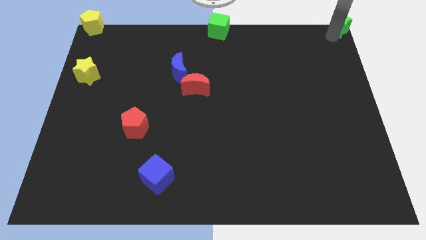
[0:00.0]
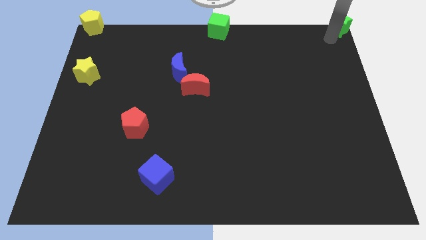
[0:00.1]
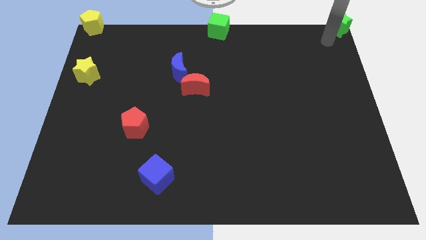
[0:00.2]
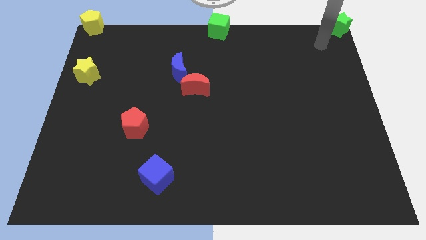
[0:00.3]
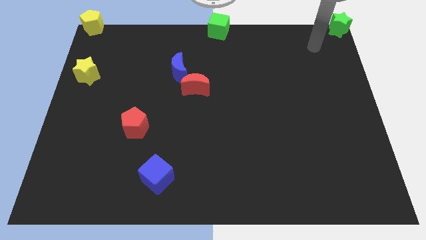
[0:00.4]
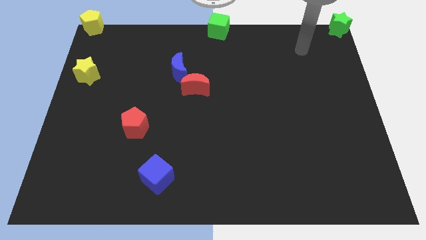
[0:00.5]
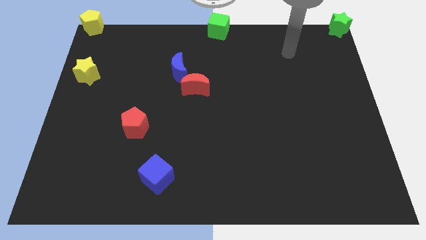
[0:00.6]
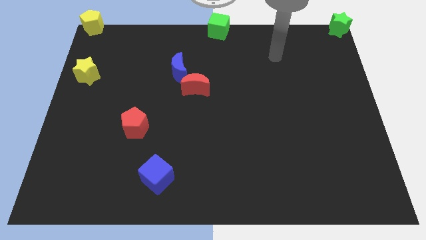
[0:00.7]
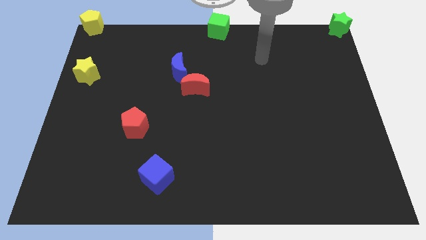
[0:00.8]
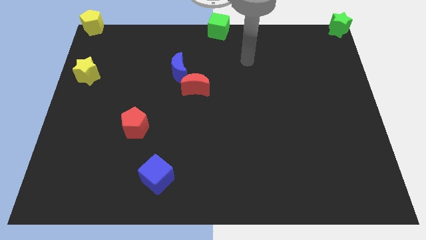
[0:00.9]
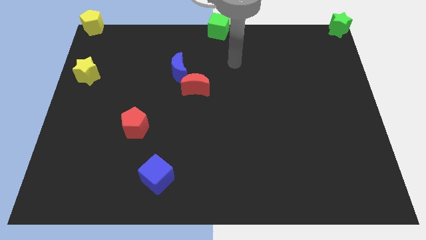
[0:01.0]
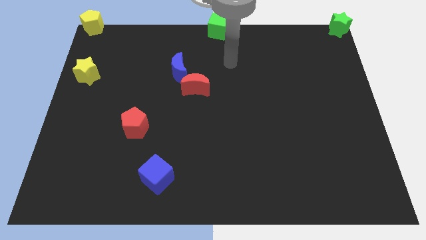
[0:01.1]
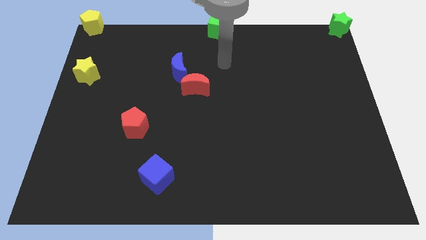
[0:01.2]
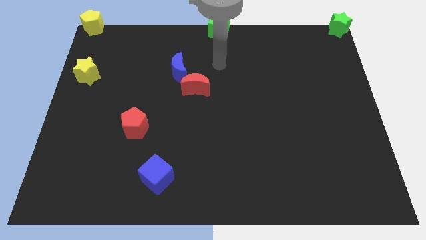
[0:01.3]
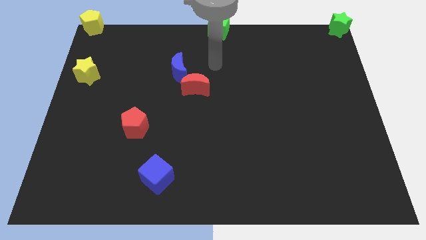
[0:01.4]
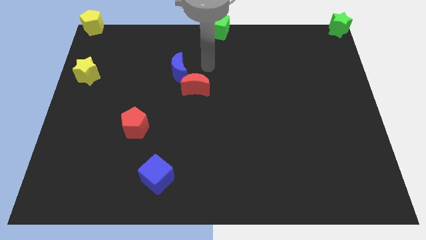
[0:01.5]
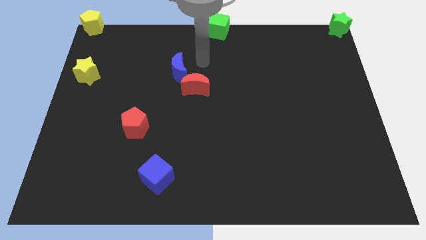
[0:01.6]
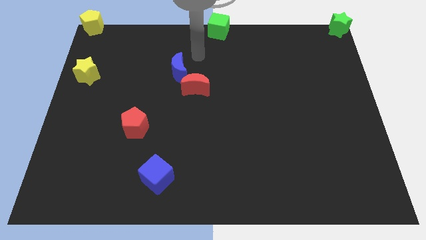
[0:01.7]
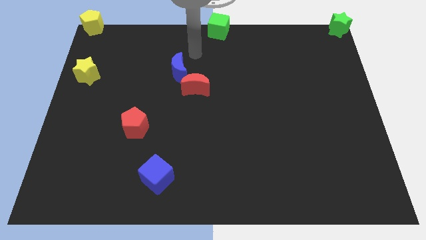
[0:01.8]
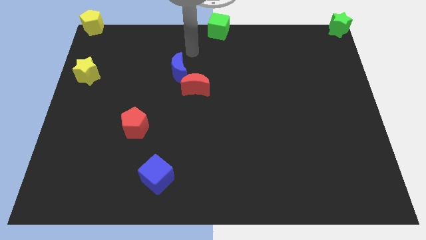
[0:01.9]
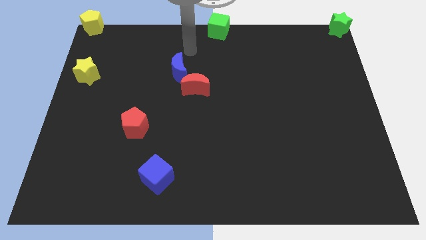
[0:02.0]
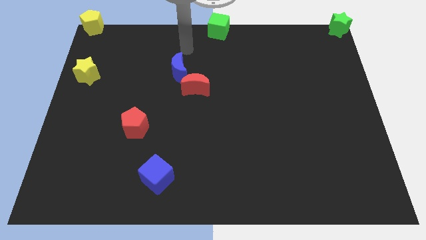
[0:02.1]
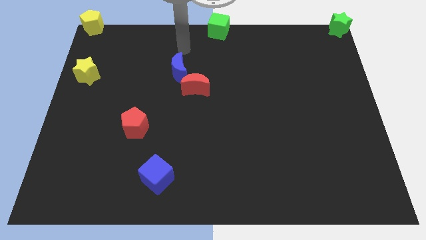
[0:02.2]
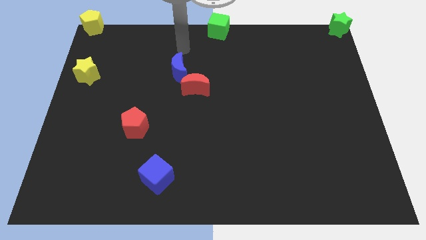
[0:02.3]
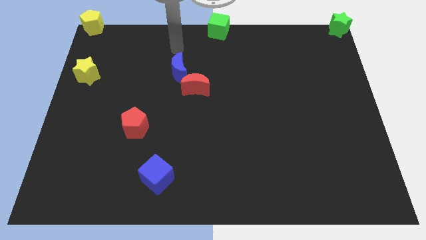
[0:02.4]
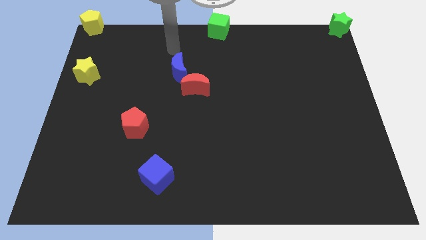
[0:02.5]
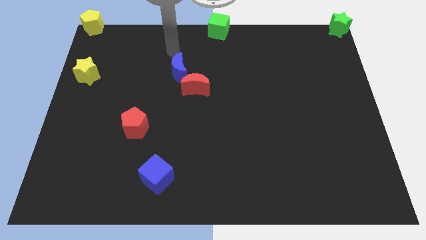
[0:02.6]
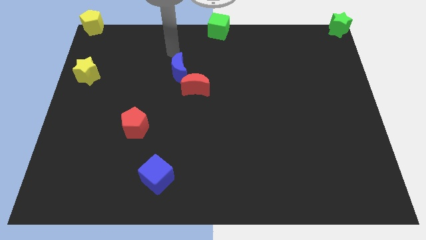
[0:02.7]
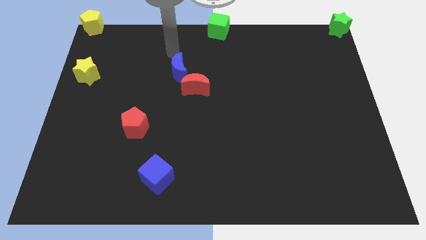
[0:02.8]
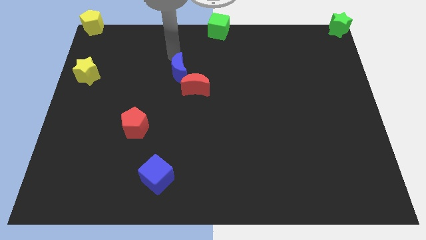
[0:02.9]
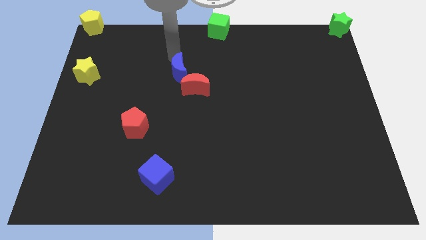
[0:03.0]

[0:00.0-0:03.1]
move your arm towards the top of the blue crescent

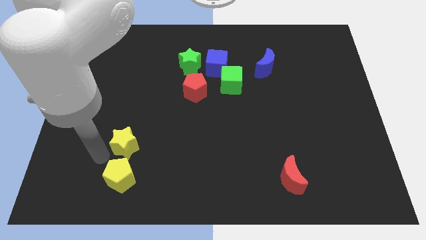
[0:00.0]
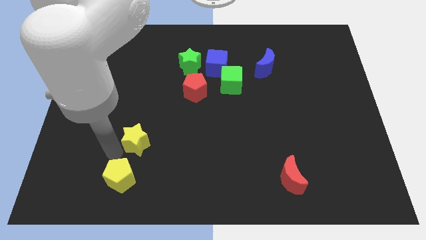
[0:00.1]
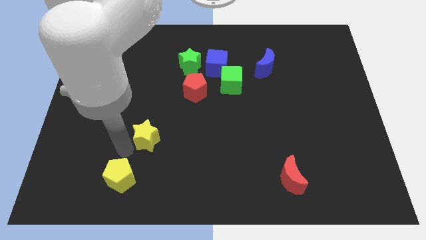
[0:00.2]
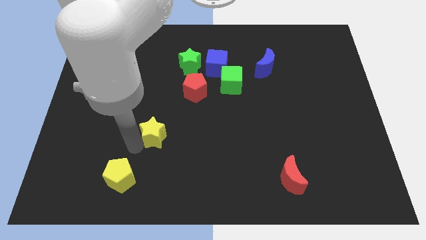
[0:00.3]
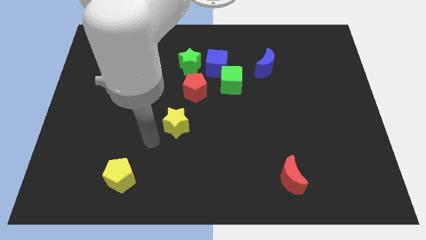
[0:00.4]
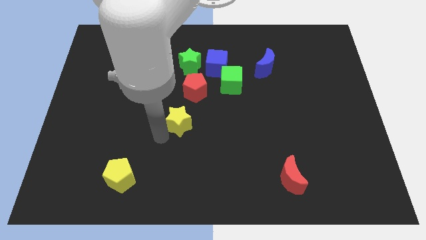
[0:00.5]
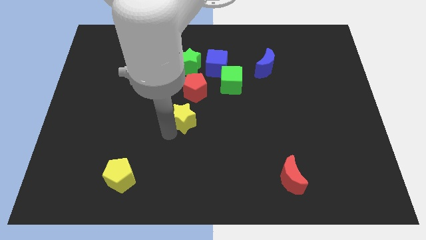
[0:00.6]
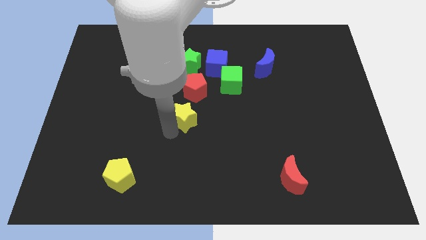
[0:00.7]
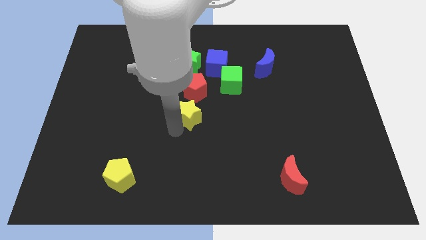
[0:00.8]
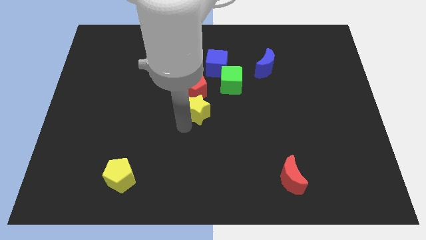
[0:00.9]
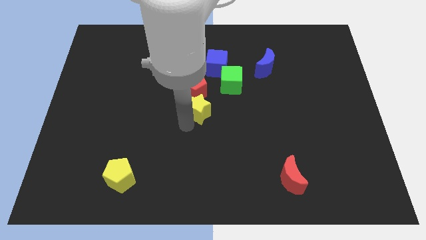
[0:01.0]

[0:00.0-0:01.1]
push the yellow star on the bottom of red pentagon

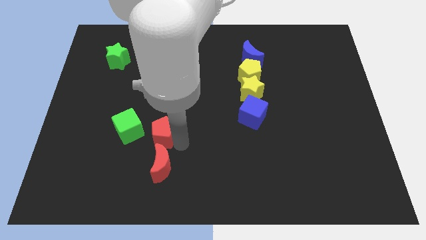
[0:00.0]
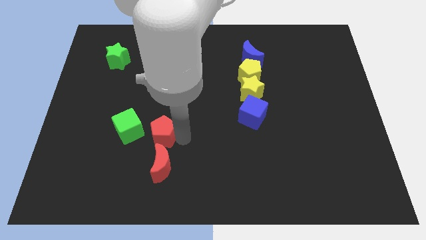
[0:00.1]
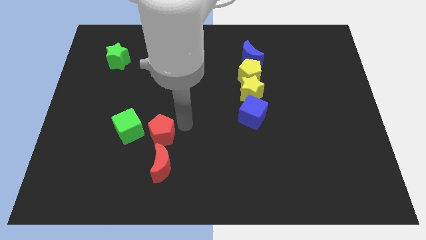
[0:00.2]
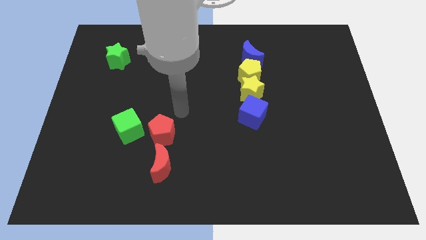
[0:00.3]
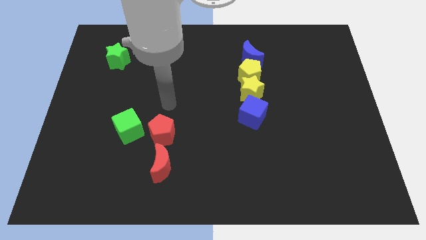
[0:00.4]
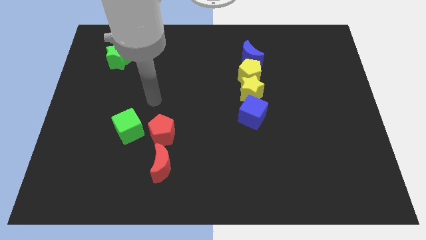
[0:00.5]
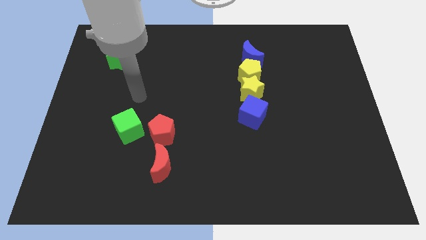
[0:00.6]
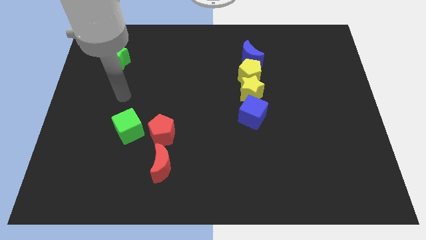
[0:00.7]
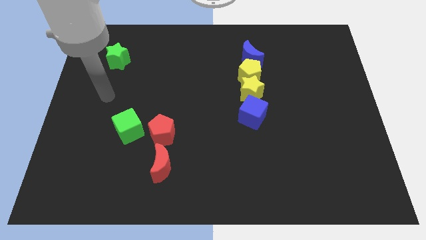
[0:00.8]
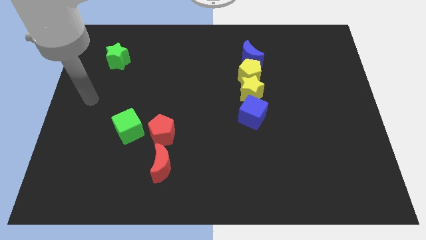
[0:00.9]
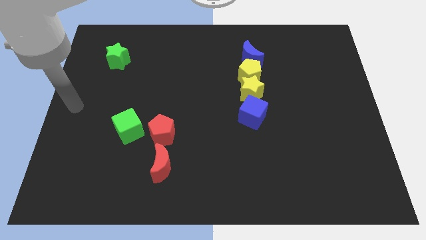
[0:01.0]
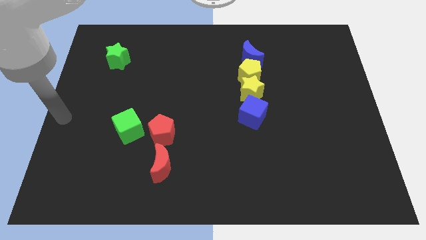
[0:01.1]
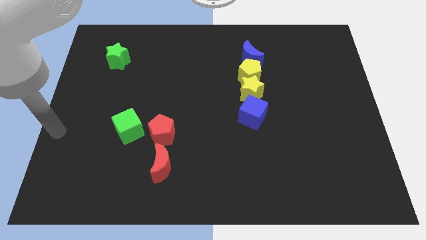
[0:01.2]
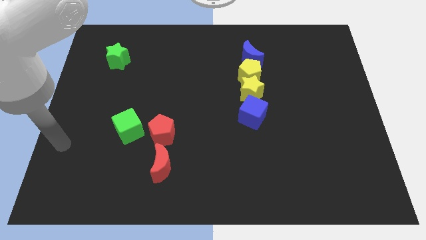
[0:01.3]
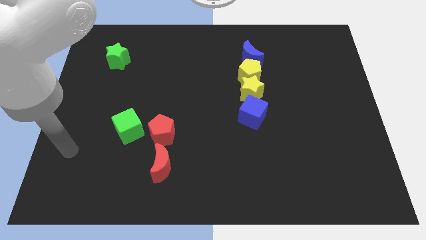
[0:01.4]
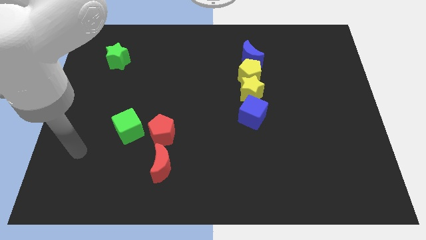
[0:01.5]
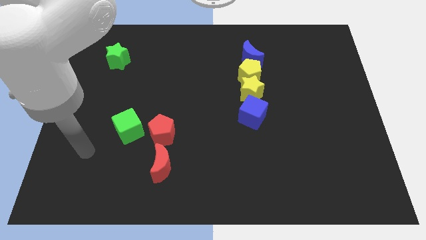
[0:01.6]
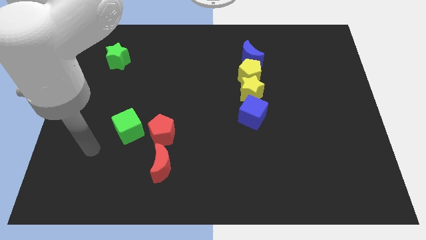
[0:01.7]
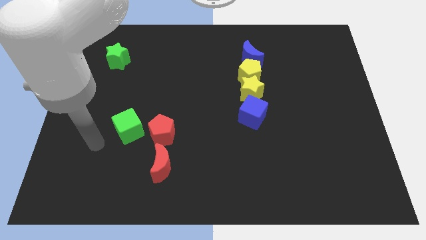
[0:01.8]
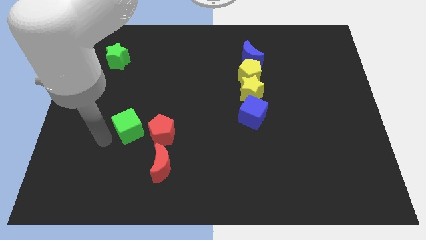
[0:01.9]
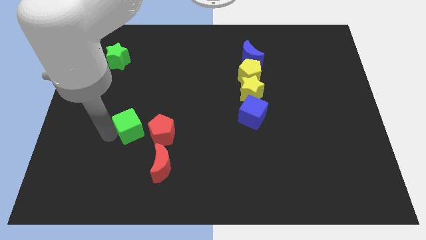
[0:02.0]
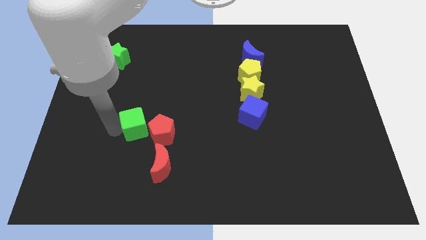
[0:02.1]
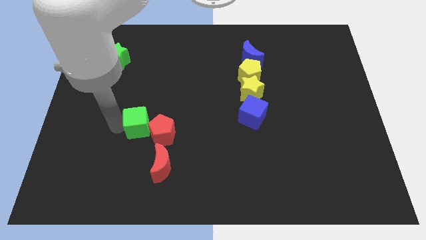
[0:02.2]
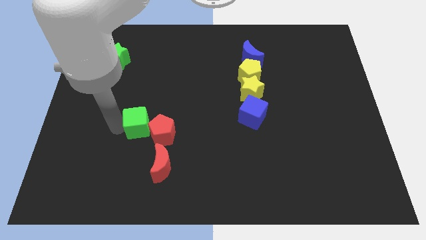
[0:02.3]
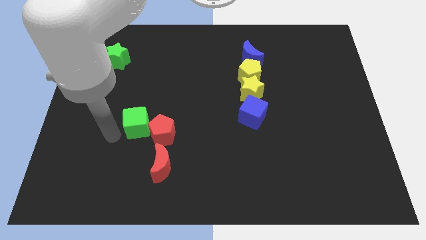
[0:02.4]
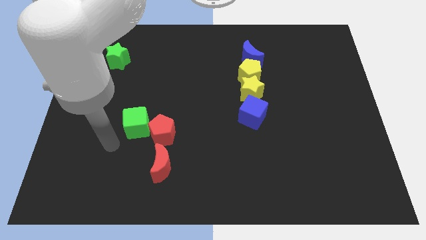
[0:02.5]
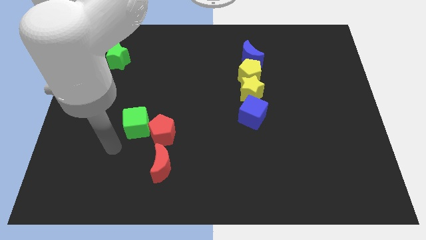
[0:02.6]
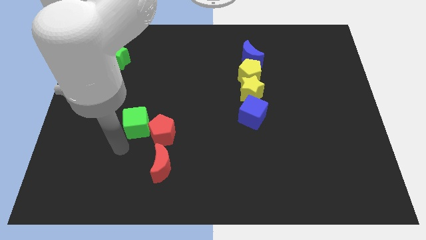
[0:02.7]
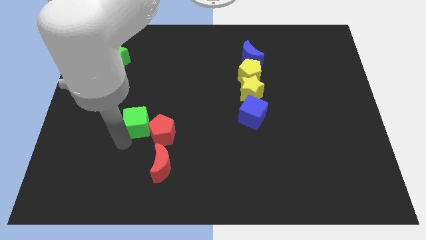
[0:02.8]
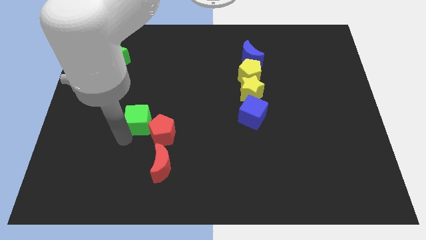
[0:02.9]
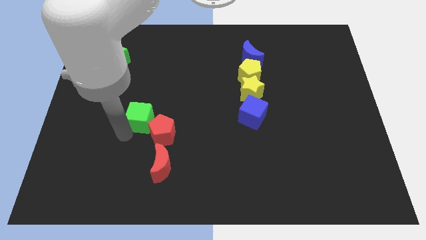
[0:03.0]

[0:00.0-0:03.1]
move green cube into red pentagon

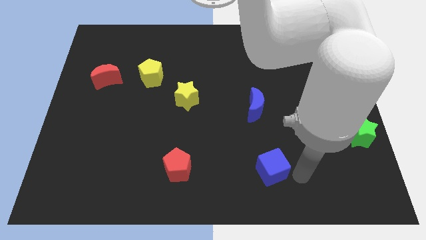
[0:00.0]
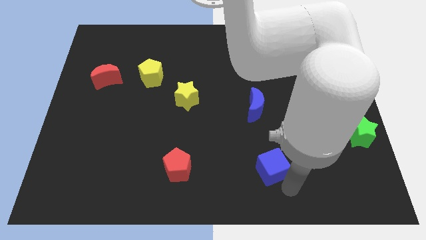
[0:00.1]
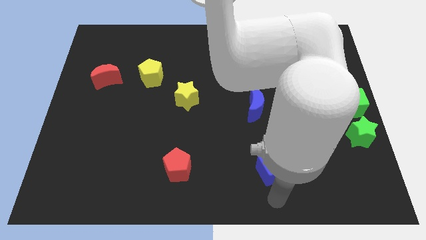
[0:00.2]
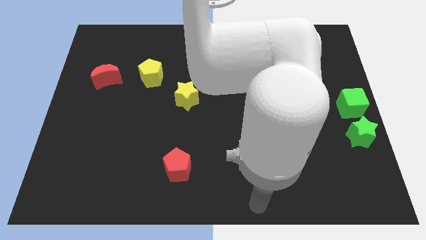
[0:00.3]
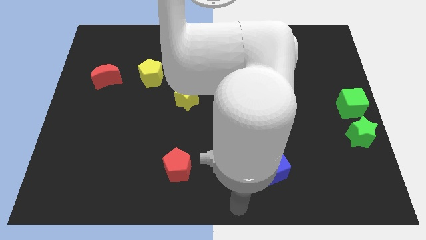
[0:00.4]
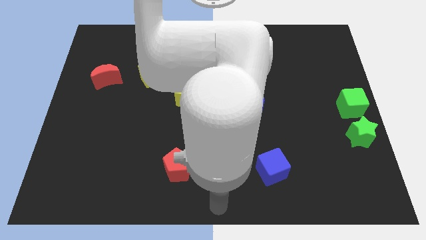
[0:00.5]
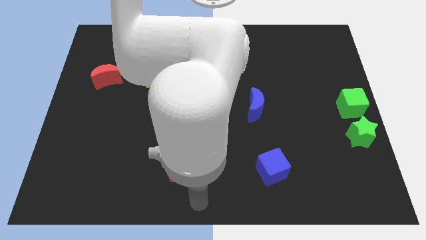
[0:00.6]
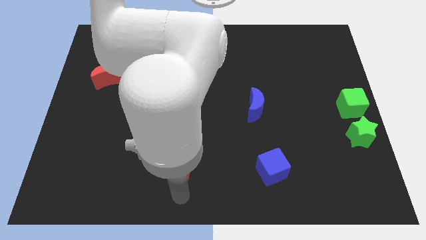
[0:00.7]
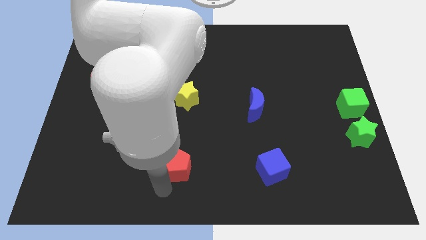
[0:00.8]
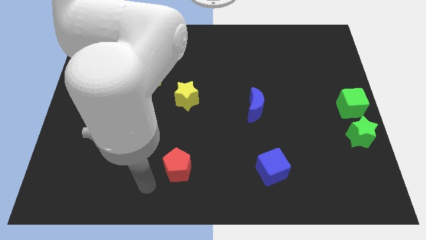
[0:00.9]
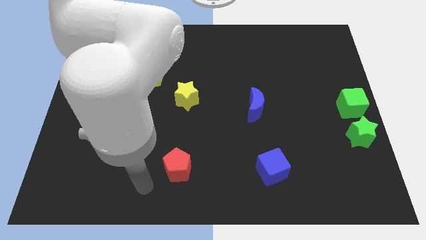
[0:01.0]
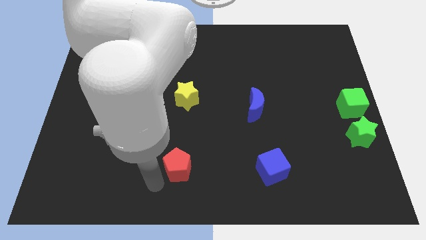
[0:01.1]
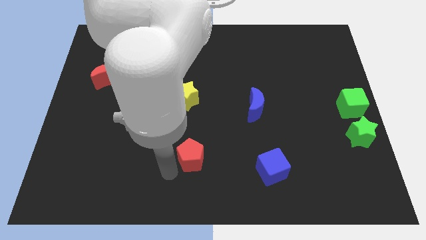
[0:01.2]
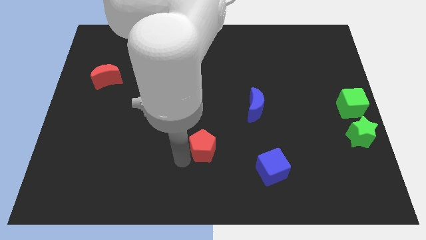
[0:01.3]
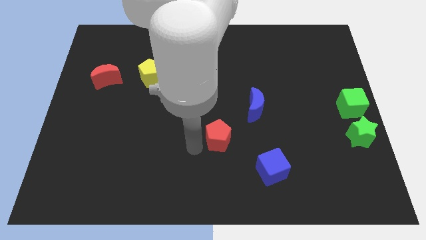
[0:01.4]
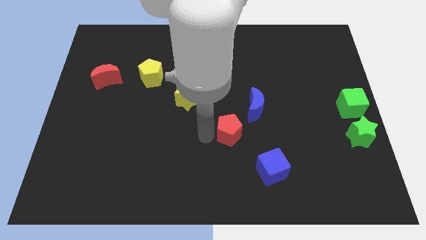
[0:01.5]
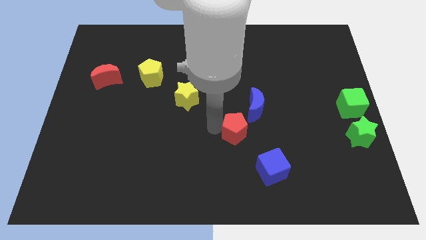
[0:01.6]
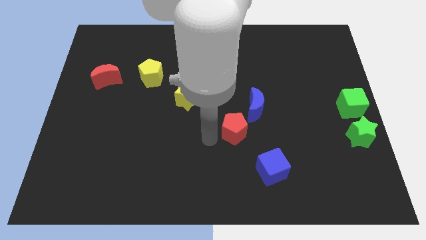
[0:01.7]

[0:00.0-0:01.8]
push the red pentagon to the bottom left side of the blue moon
